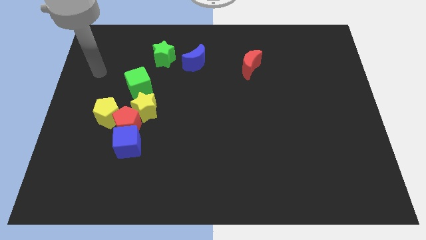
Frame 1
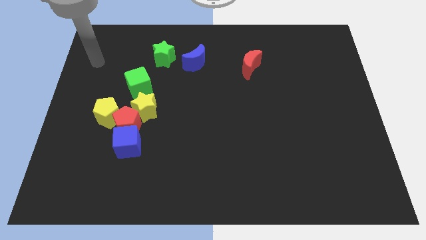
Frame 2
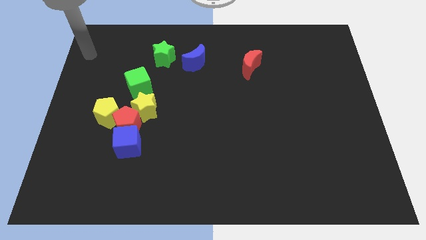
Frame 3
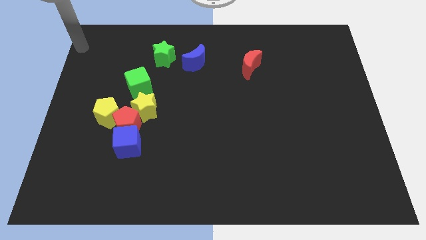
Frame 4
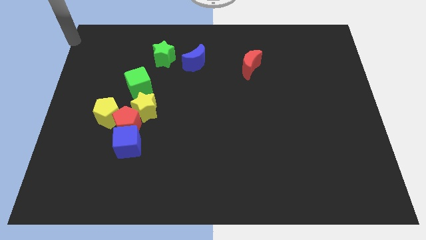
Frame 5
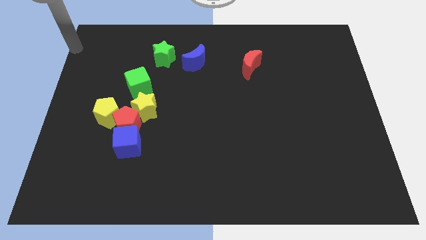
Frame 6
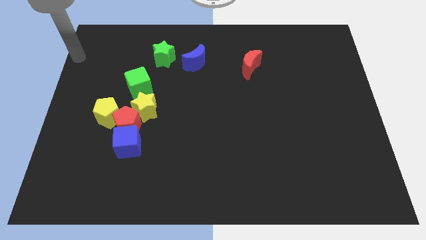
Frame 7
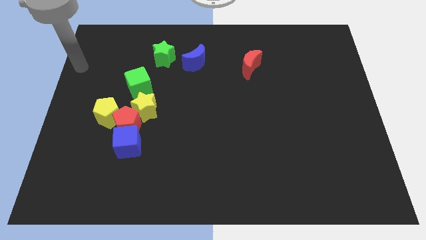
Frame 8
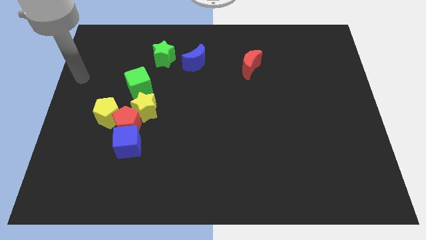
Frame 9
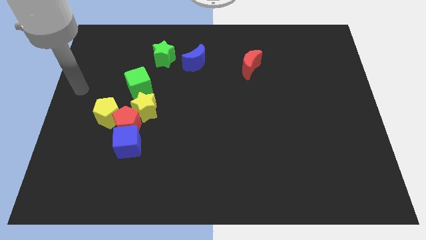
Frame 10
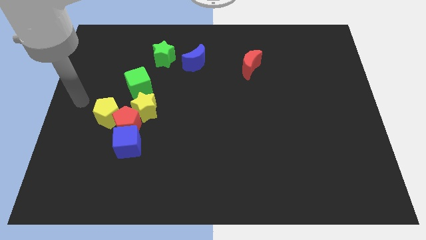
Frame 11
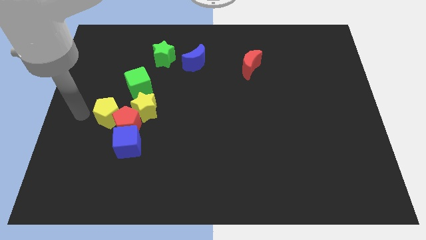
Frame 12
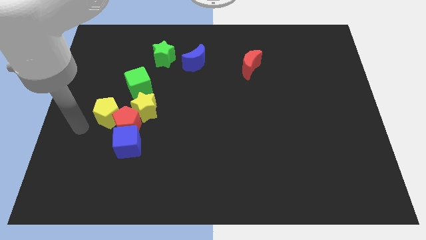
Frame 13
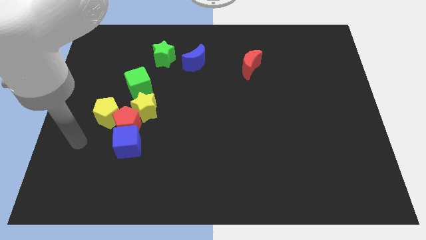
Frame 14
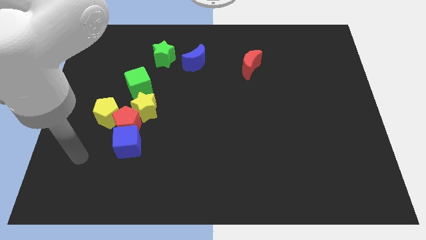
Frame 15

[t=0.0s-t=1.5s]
push your hand left side of the blue cube

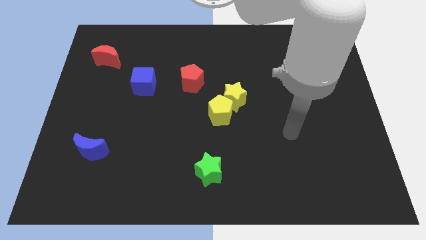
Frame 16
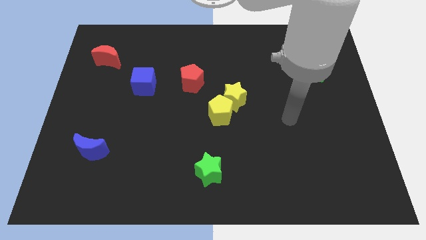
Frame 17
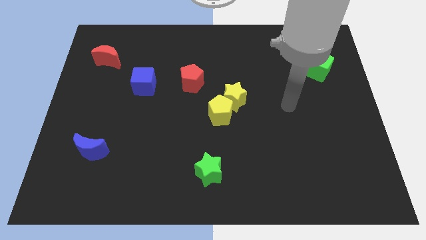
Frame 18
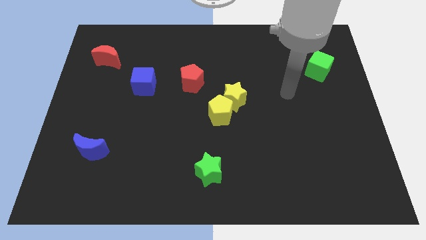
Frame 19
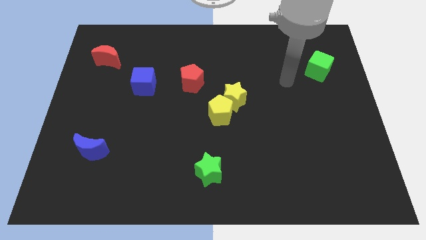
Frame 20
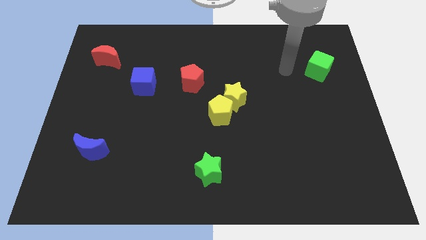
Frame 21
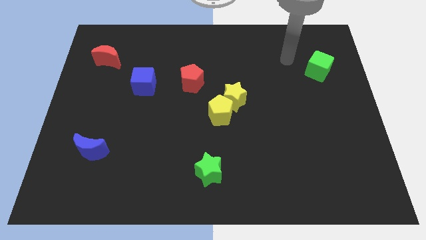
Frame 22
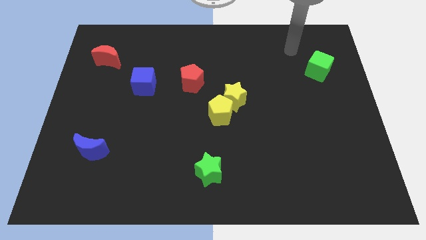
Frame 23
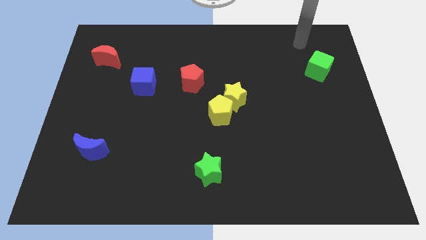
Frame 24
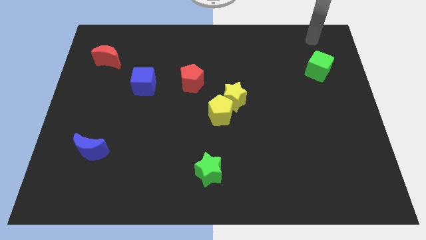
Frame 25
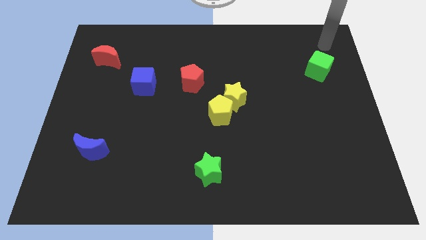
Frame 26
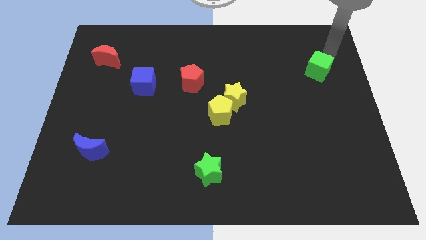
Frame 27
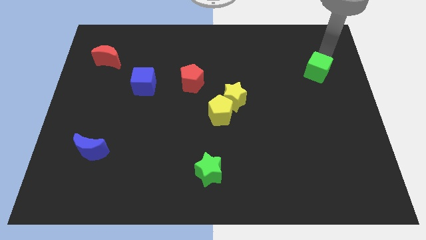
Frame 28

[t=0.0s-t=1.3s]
touch the top of green cube

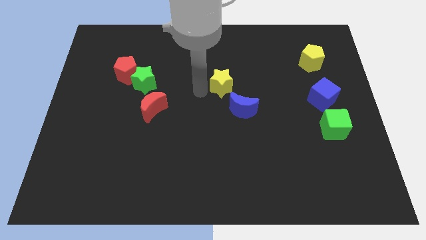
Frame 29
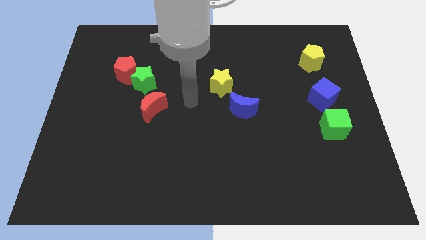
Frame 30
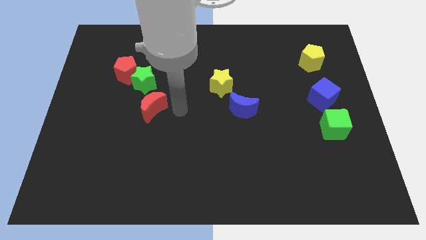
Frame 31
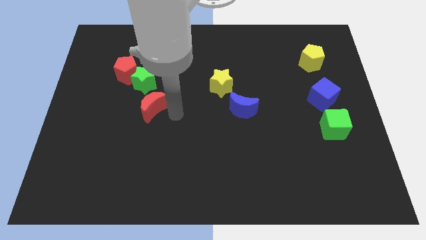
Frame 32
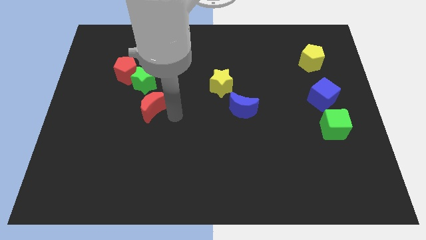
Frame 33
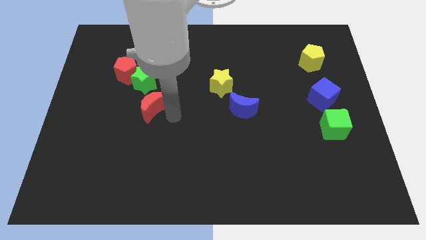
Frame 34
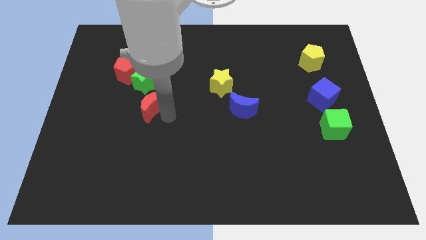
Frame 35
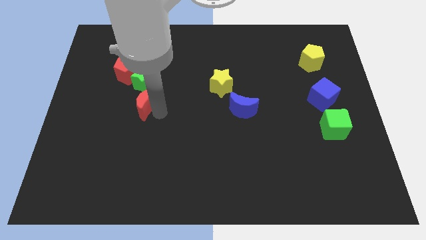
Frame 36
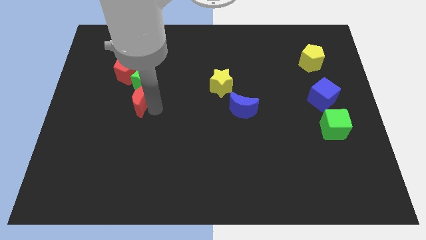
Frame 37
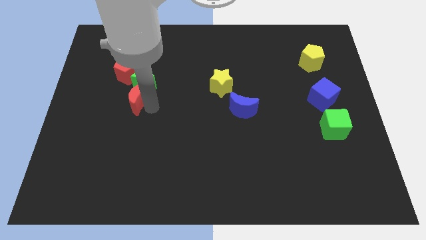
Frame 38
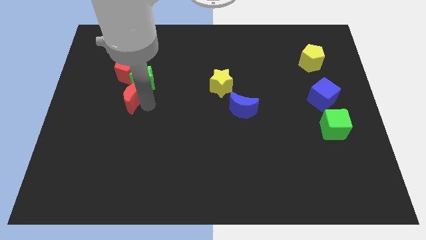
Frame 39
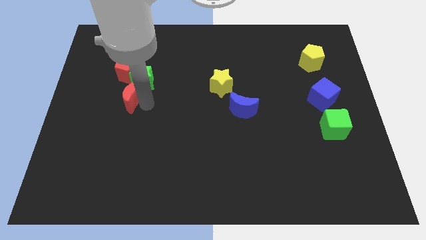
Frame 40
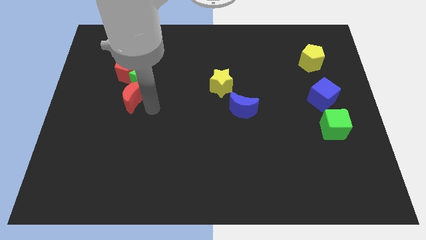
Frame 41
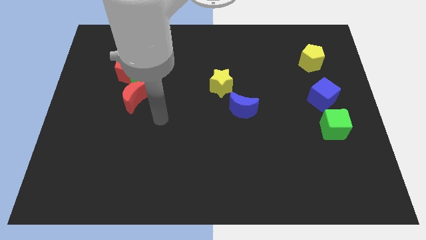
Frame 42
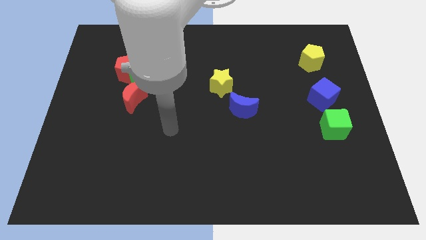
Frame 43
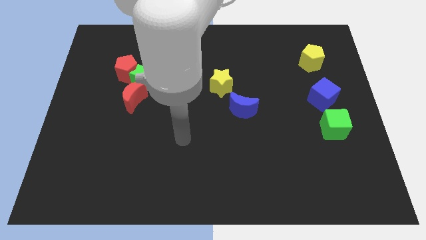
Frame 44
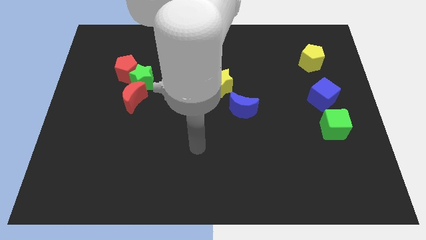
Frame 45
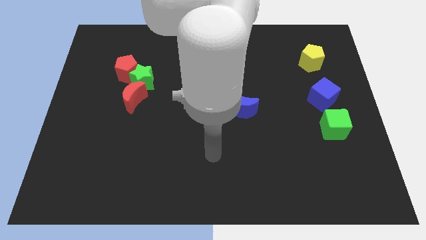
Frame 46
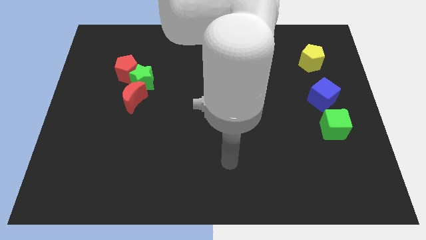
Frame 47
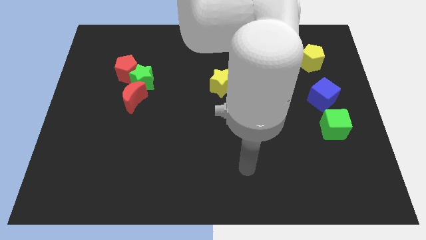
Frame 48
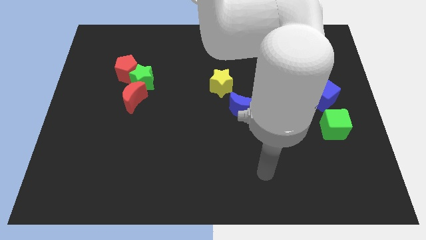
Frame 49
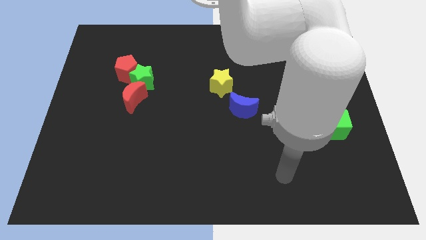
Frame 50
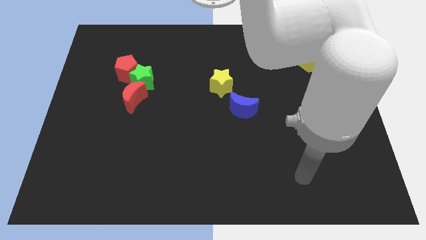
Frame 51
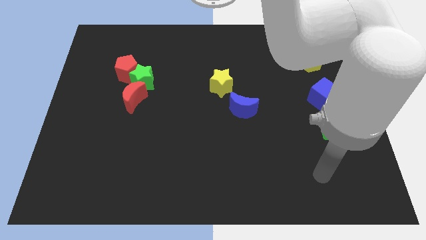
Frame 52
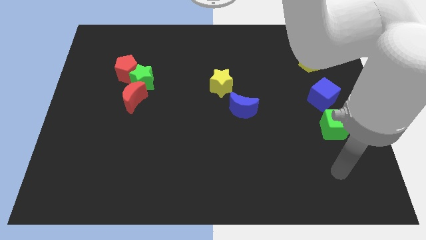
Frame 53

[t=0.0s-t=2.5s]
move the red crescent to the left bottom side of the green star

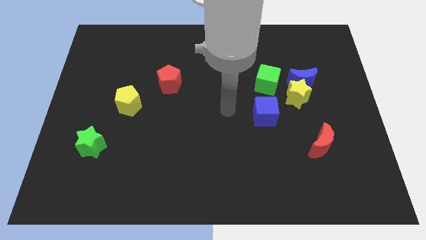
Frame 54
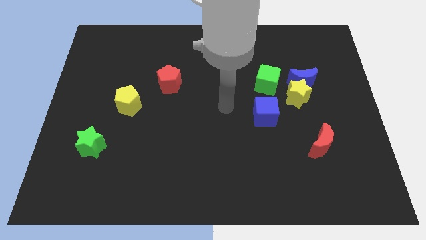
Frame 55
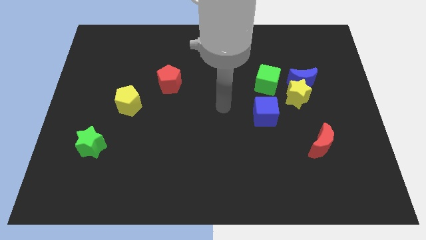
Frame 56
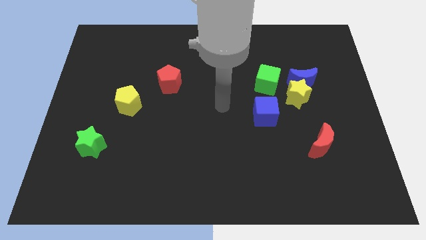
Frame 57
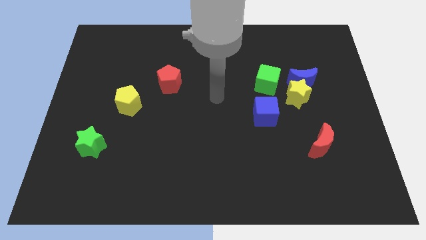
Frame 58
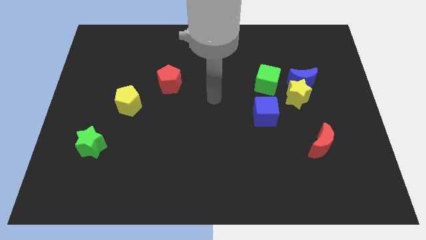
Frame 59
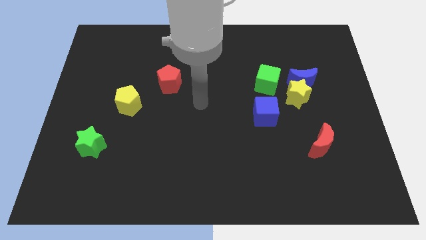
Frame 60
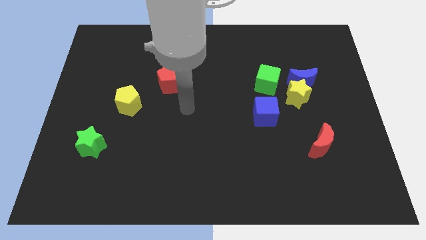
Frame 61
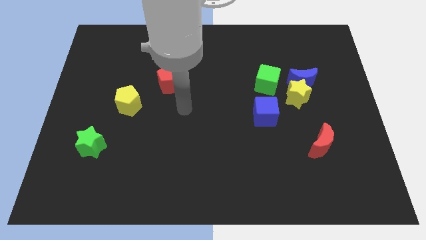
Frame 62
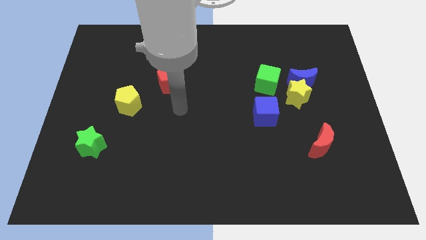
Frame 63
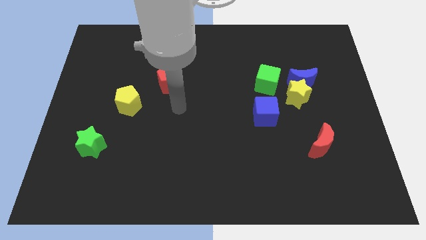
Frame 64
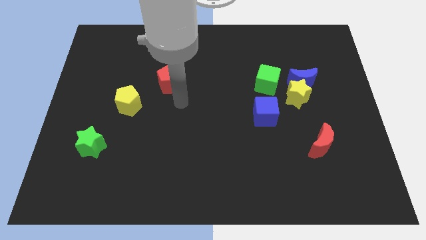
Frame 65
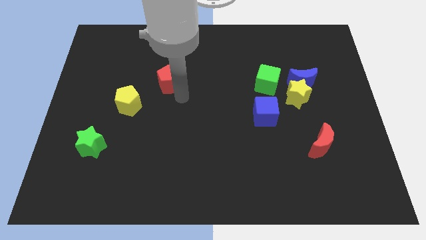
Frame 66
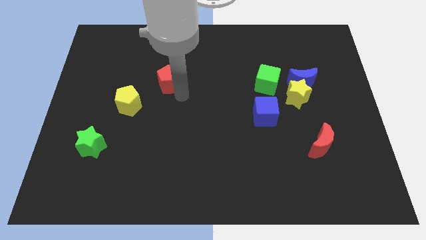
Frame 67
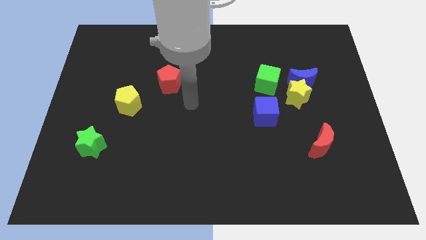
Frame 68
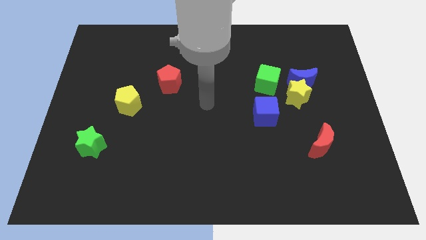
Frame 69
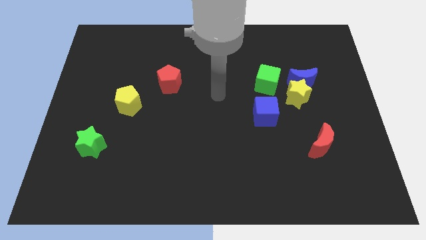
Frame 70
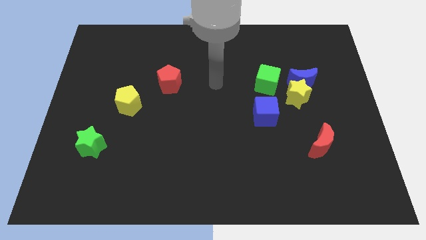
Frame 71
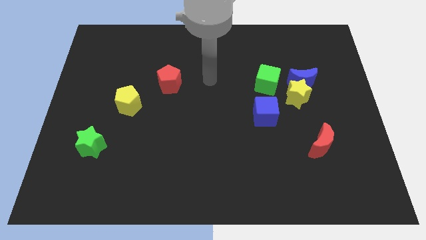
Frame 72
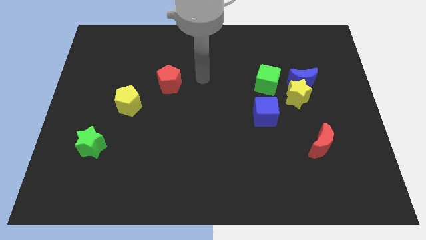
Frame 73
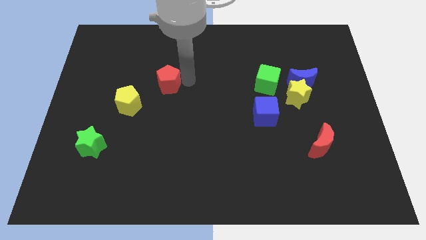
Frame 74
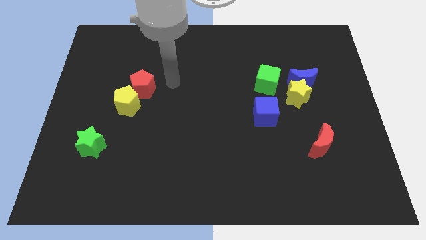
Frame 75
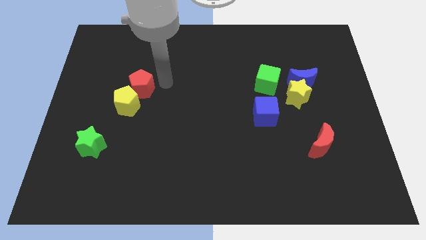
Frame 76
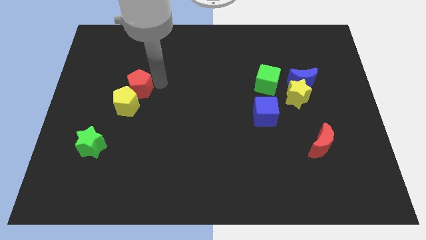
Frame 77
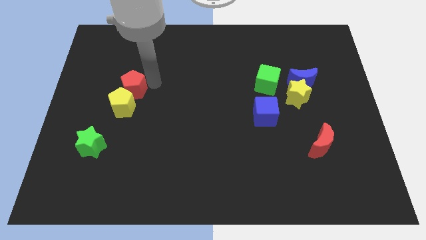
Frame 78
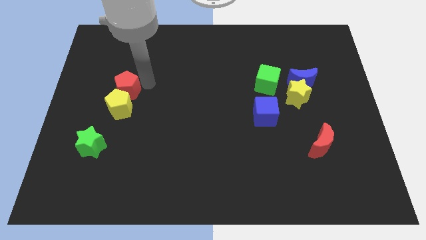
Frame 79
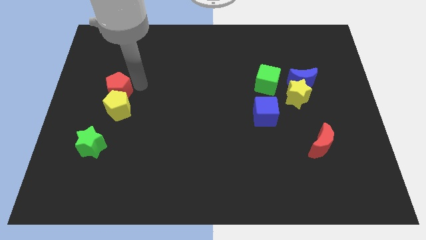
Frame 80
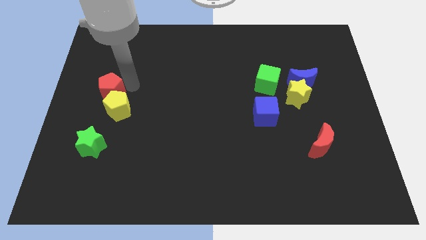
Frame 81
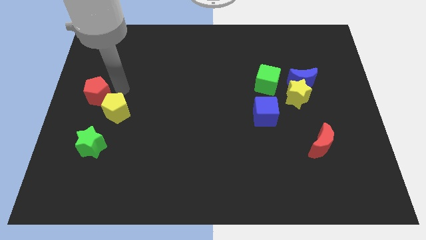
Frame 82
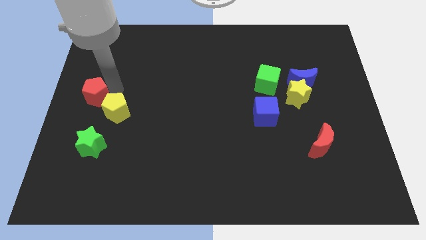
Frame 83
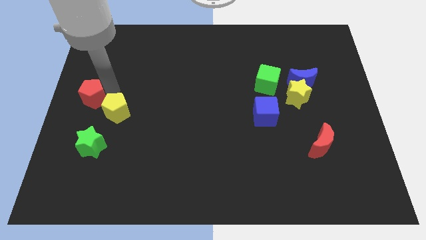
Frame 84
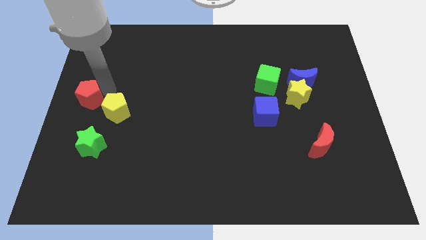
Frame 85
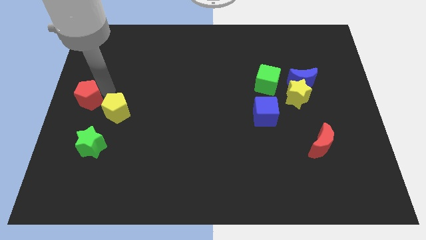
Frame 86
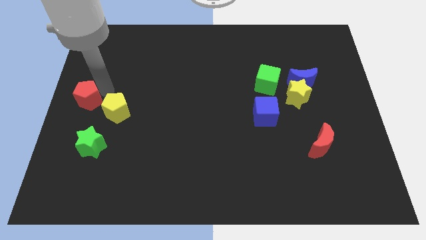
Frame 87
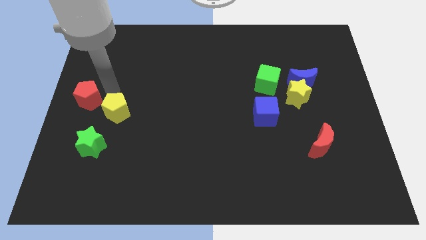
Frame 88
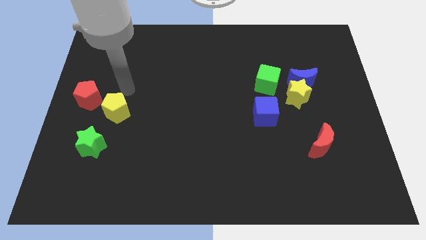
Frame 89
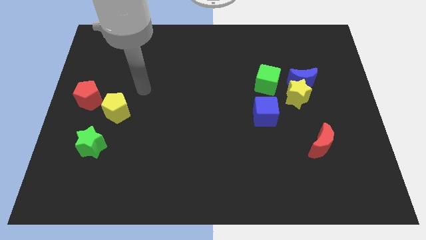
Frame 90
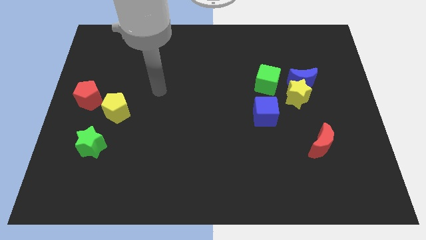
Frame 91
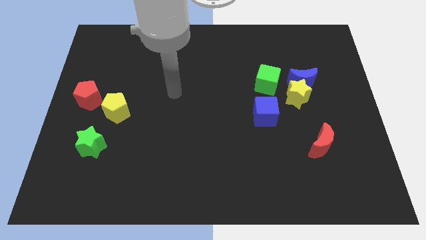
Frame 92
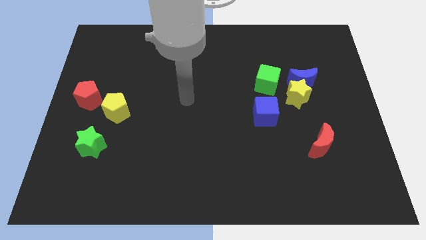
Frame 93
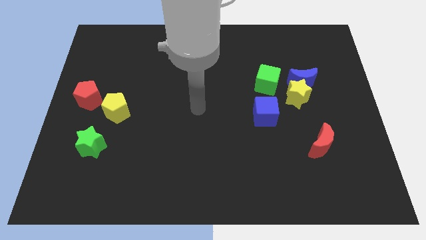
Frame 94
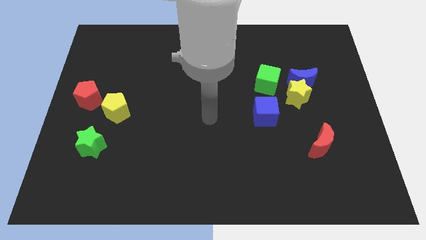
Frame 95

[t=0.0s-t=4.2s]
drag red pentagon towards middle left side of the board
